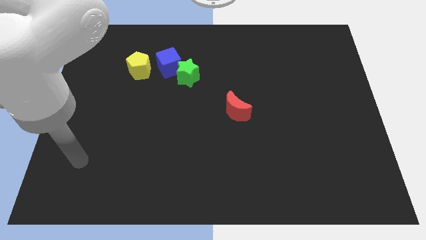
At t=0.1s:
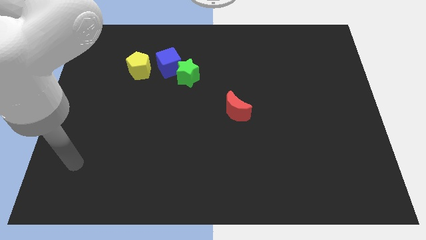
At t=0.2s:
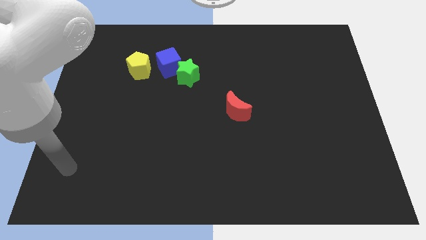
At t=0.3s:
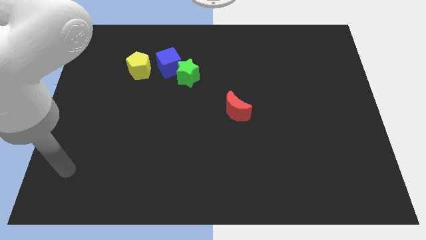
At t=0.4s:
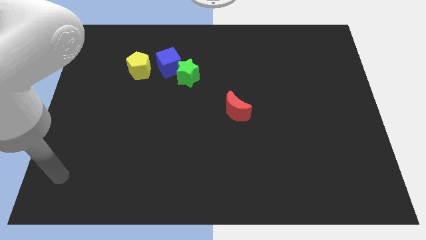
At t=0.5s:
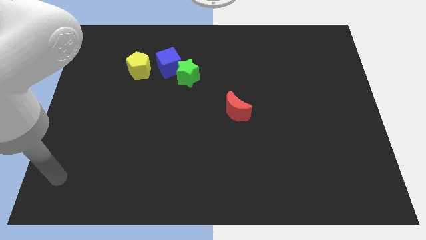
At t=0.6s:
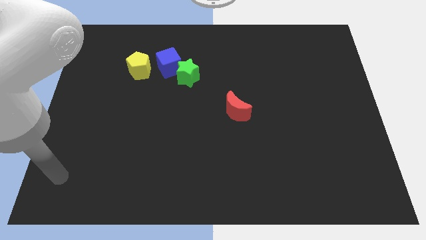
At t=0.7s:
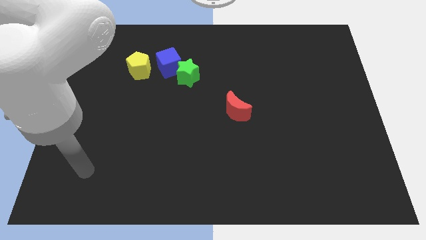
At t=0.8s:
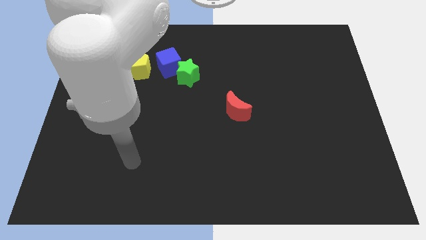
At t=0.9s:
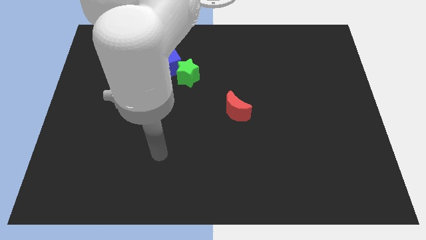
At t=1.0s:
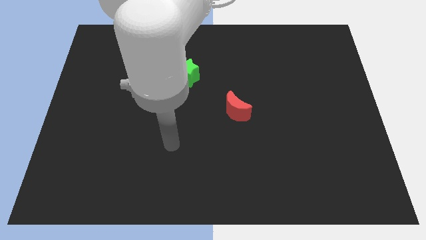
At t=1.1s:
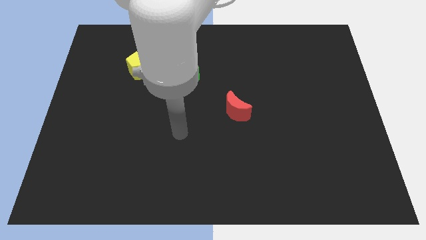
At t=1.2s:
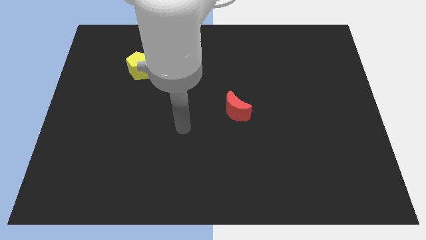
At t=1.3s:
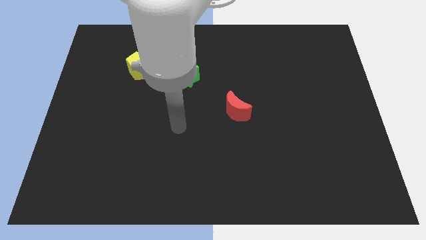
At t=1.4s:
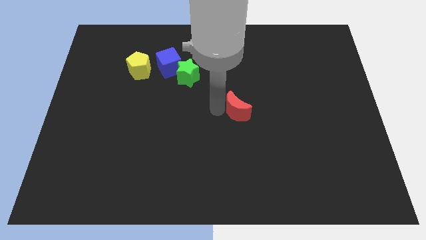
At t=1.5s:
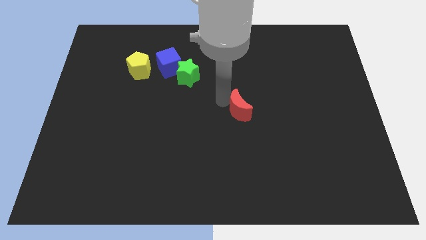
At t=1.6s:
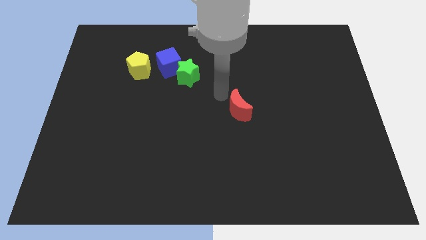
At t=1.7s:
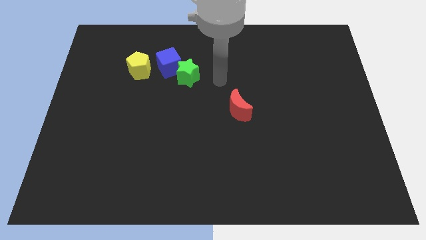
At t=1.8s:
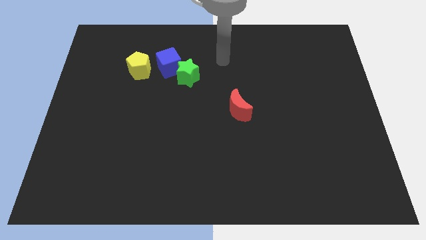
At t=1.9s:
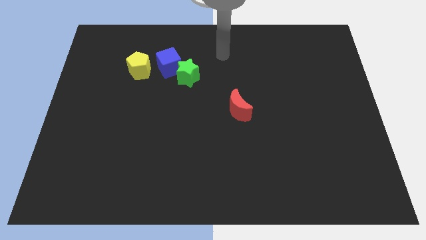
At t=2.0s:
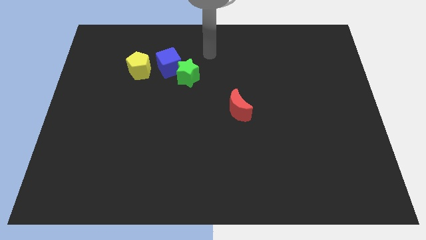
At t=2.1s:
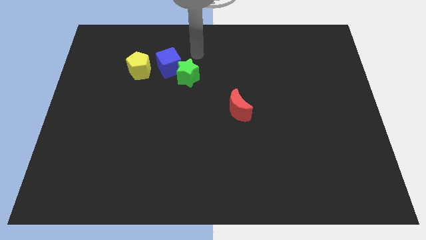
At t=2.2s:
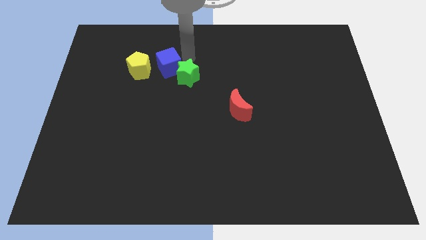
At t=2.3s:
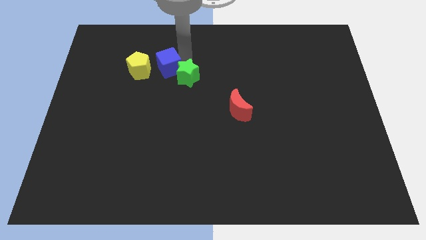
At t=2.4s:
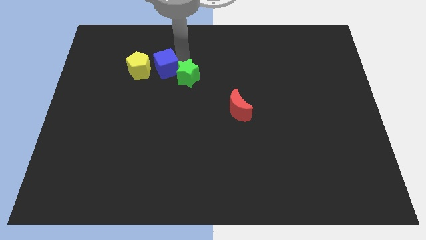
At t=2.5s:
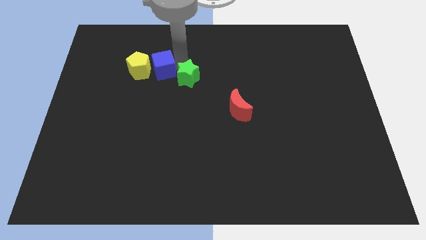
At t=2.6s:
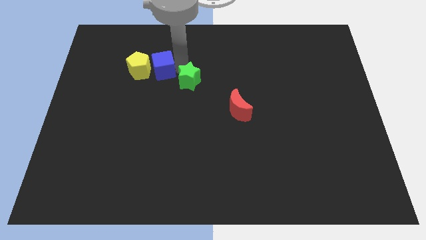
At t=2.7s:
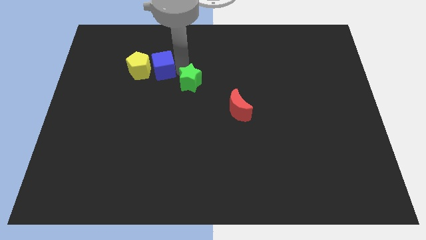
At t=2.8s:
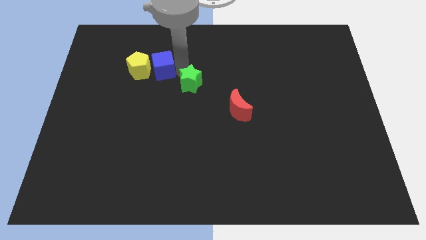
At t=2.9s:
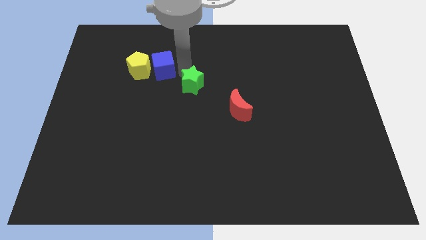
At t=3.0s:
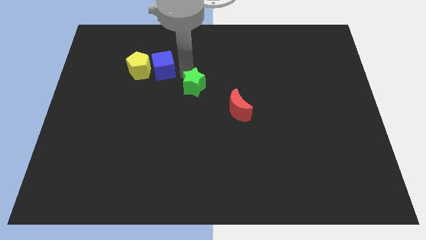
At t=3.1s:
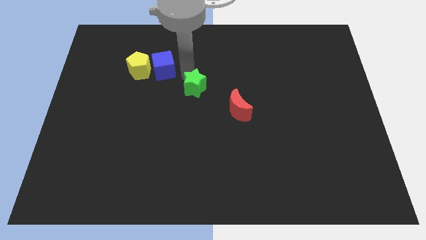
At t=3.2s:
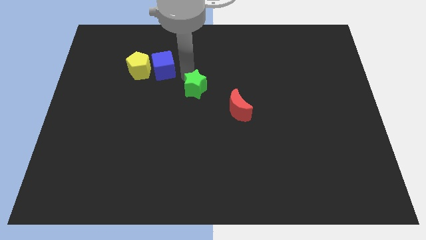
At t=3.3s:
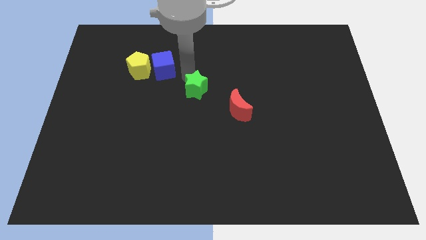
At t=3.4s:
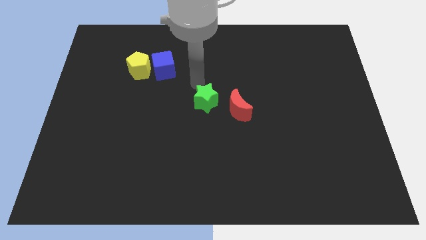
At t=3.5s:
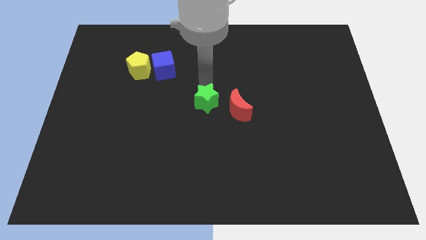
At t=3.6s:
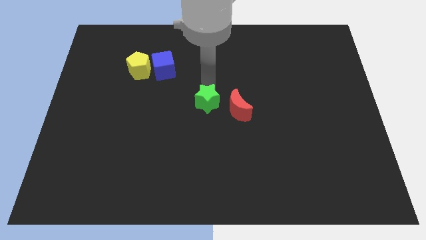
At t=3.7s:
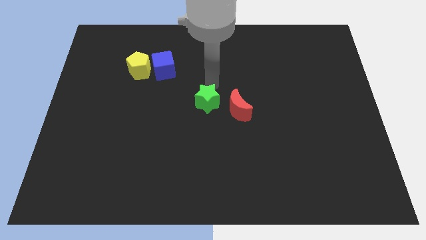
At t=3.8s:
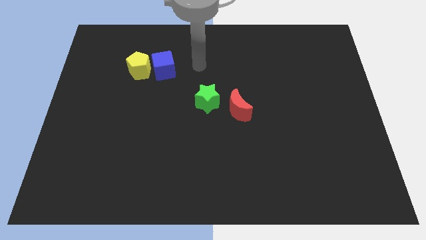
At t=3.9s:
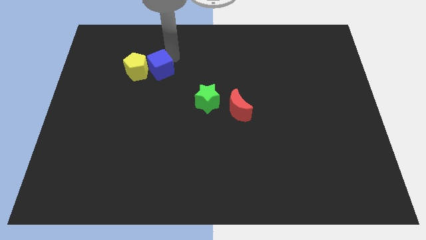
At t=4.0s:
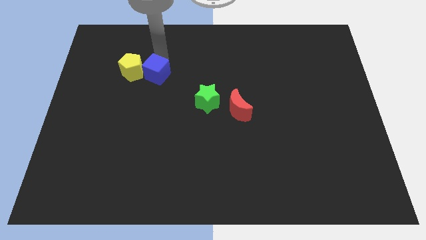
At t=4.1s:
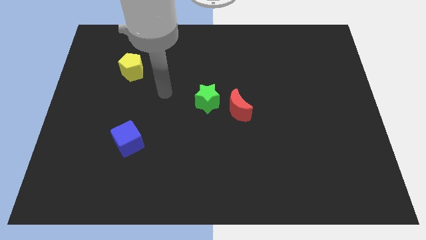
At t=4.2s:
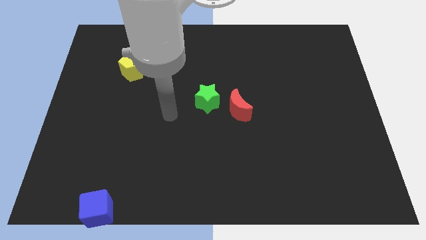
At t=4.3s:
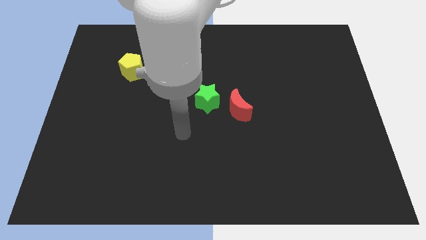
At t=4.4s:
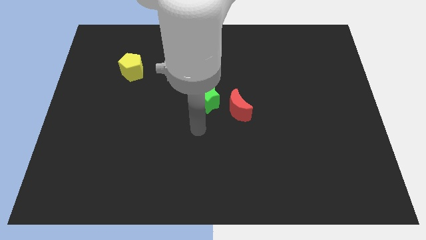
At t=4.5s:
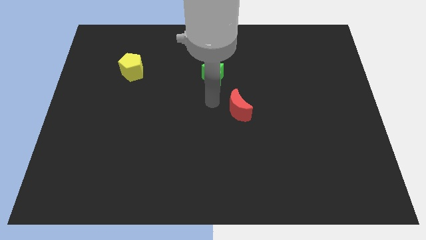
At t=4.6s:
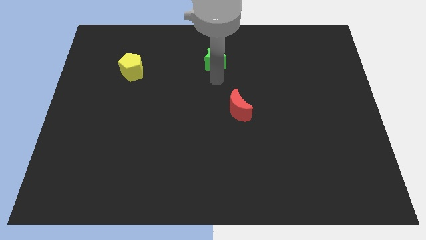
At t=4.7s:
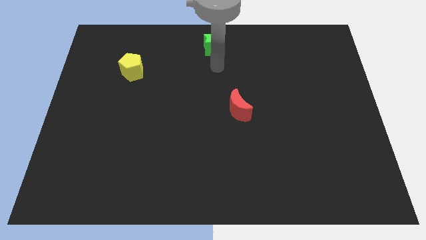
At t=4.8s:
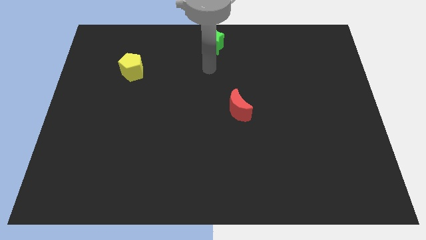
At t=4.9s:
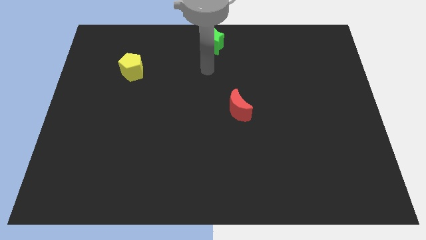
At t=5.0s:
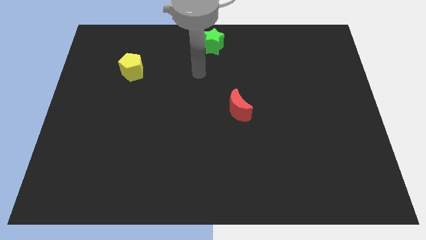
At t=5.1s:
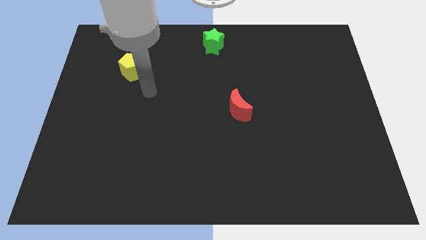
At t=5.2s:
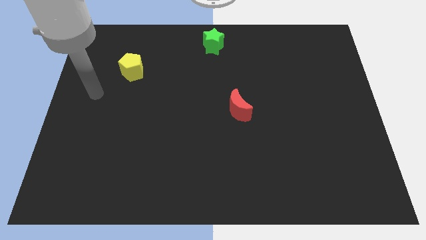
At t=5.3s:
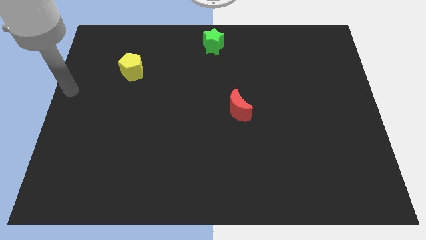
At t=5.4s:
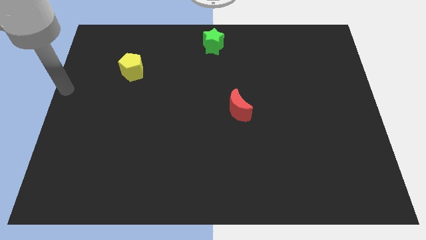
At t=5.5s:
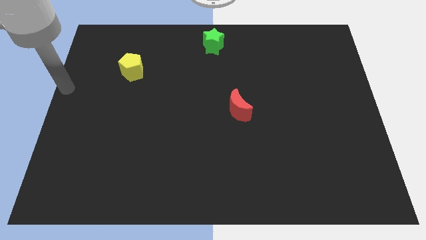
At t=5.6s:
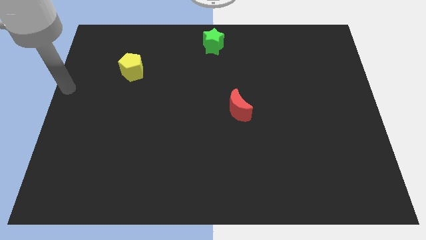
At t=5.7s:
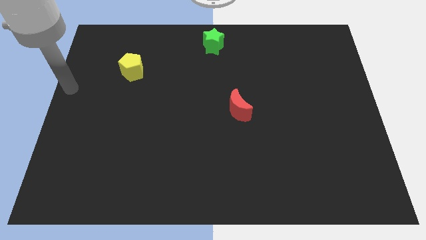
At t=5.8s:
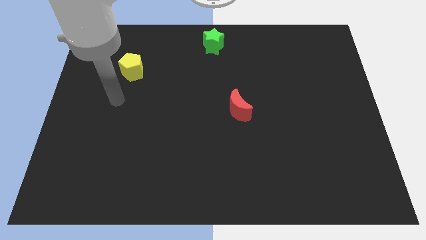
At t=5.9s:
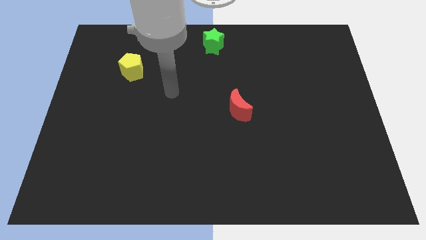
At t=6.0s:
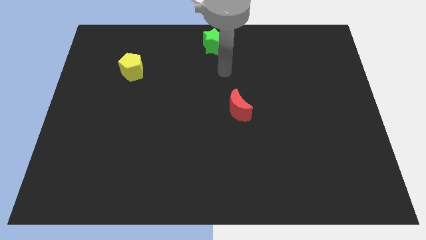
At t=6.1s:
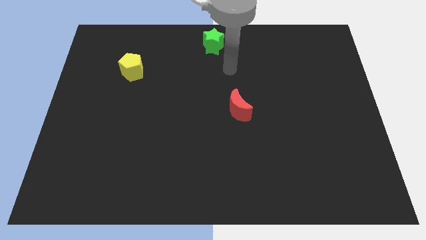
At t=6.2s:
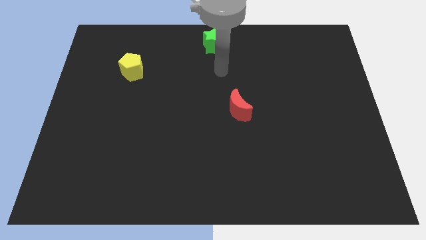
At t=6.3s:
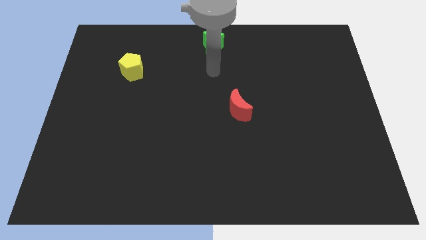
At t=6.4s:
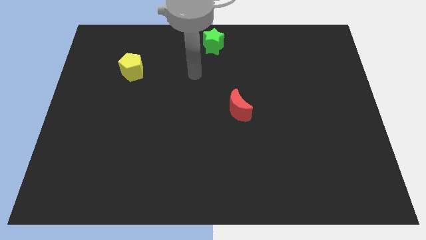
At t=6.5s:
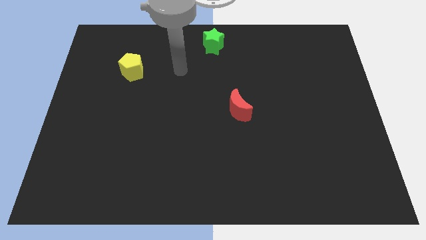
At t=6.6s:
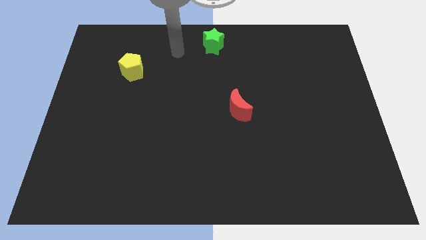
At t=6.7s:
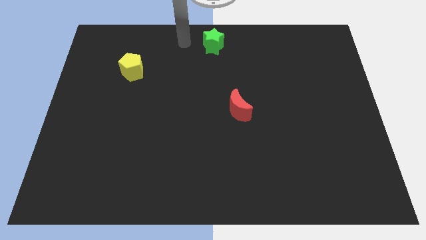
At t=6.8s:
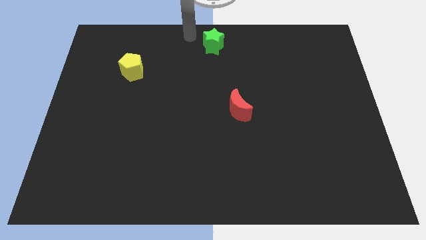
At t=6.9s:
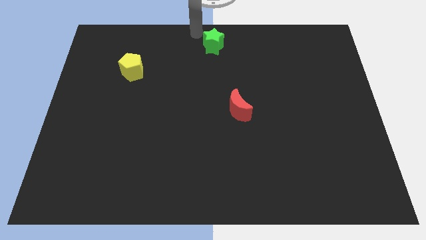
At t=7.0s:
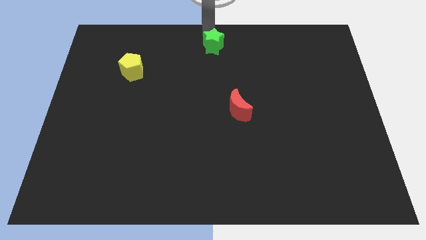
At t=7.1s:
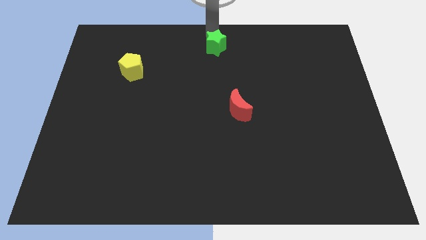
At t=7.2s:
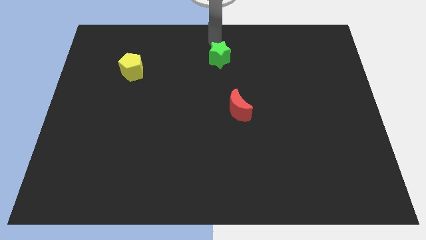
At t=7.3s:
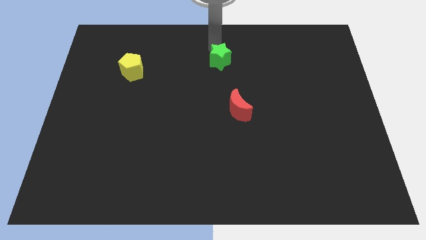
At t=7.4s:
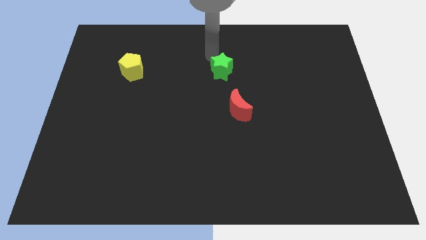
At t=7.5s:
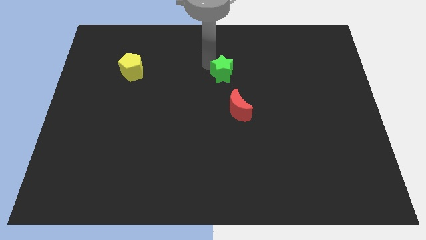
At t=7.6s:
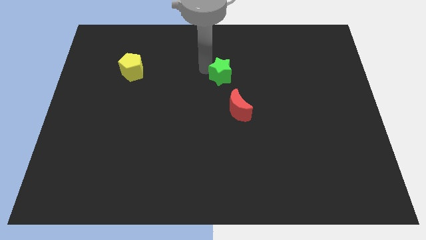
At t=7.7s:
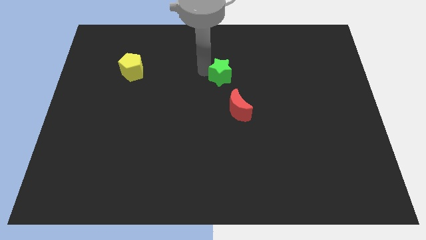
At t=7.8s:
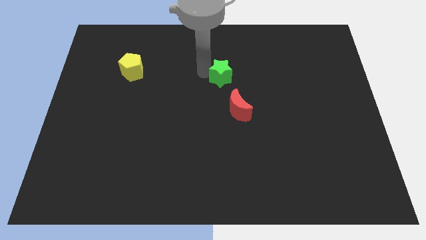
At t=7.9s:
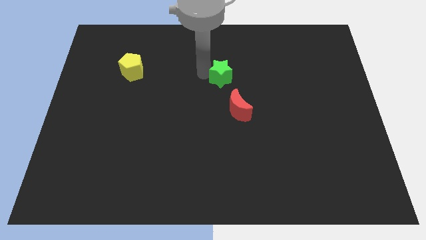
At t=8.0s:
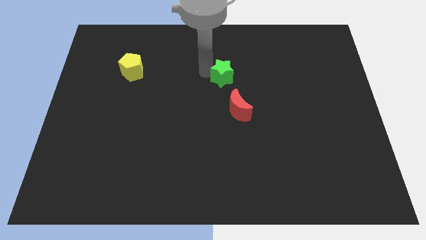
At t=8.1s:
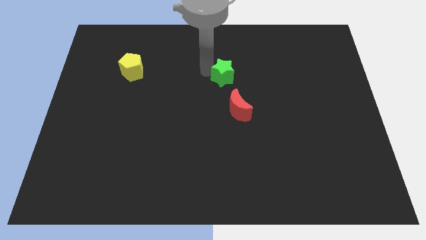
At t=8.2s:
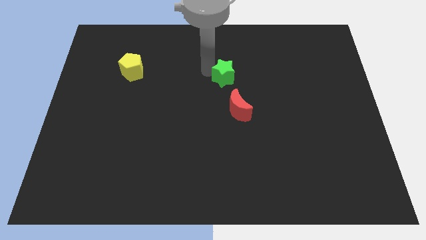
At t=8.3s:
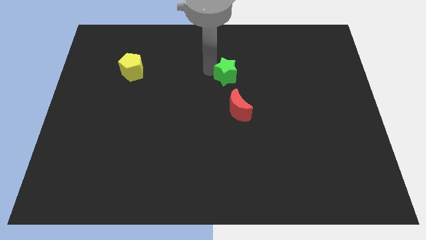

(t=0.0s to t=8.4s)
move the star to the moon
